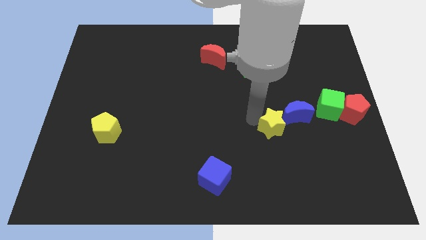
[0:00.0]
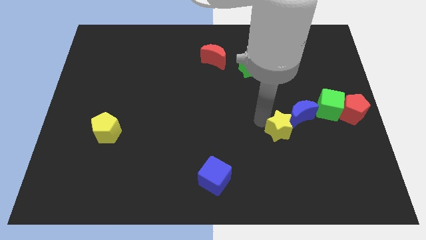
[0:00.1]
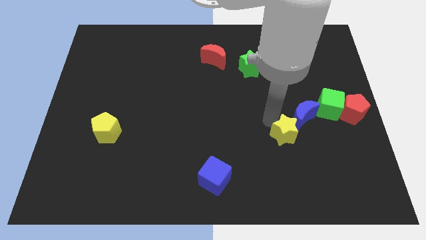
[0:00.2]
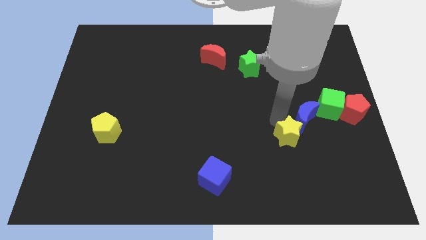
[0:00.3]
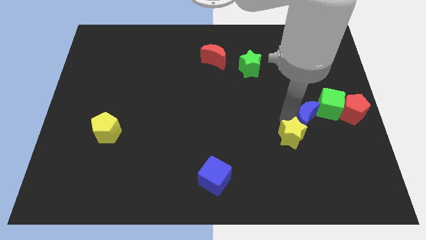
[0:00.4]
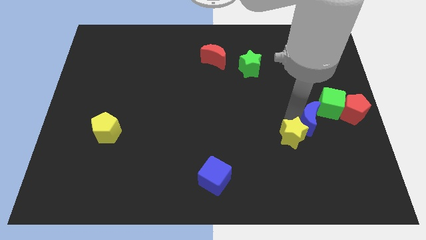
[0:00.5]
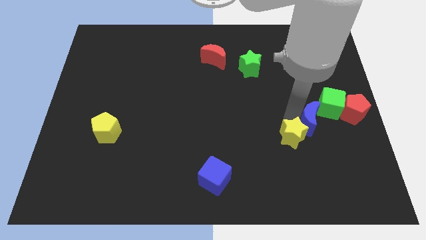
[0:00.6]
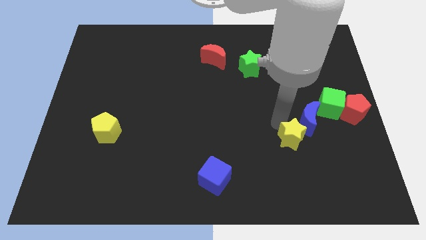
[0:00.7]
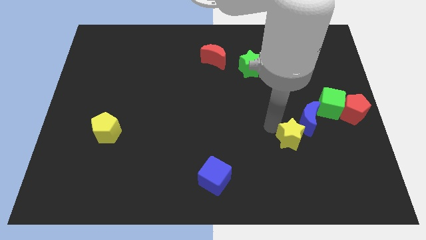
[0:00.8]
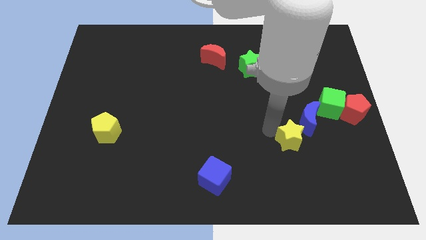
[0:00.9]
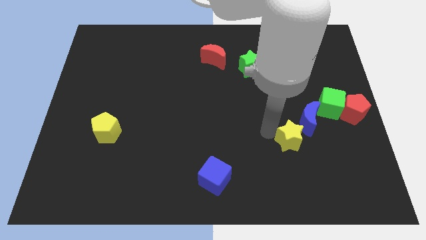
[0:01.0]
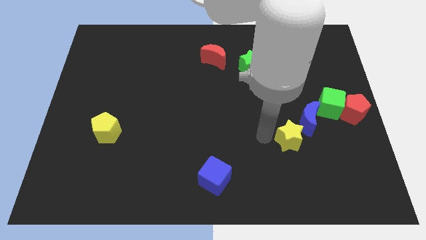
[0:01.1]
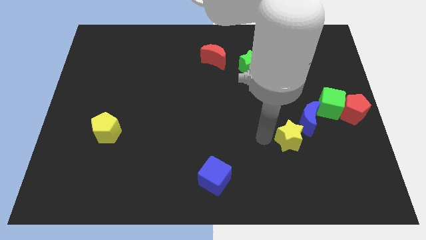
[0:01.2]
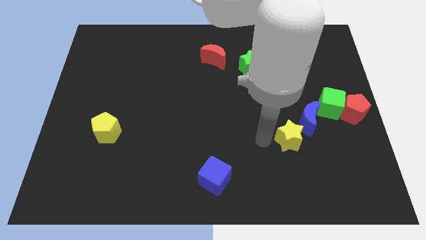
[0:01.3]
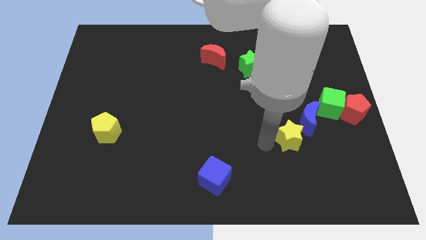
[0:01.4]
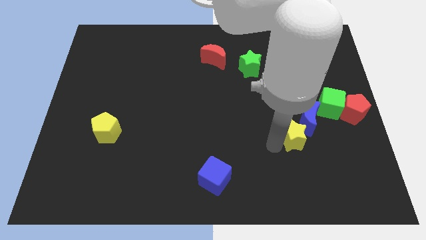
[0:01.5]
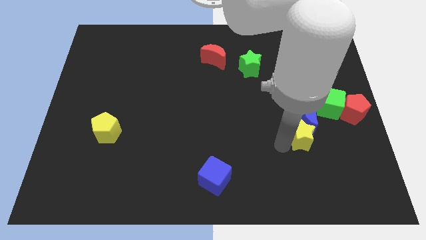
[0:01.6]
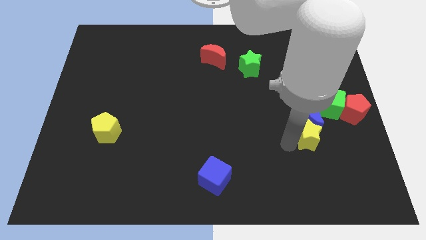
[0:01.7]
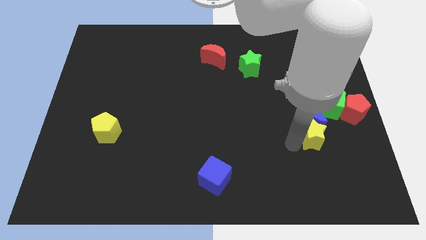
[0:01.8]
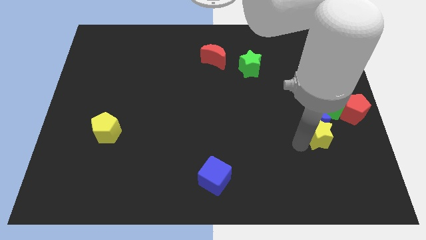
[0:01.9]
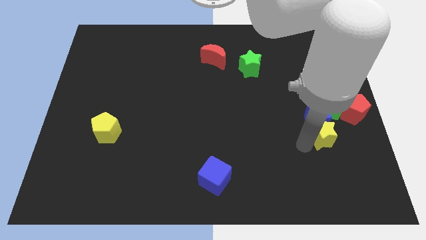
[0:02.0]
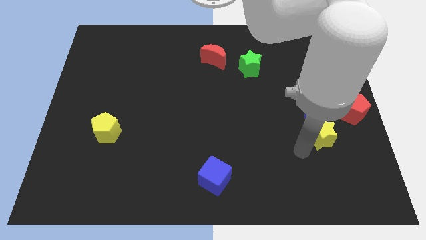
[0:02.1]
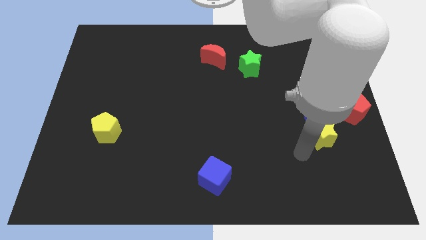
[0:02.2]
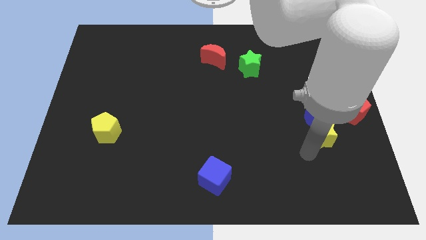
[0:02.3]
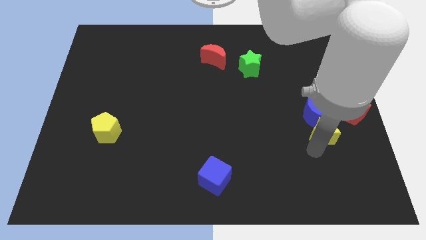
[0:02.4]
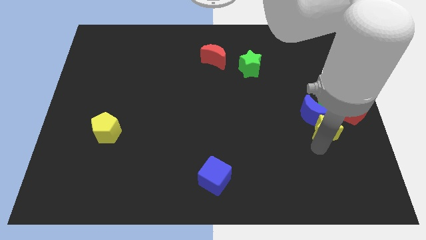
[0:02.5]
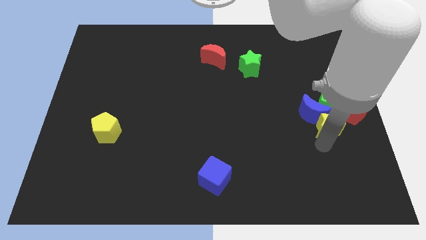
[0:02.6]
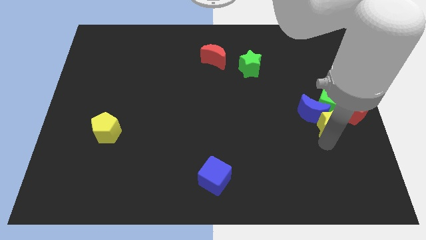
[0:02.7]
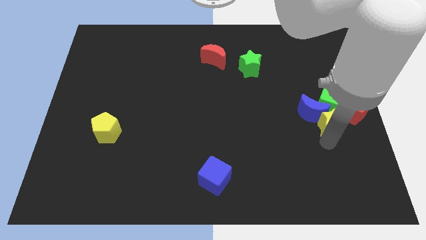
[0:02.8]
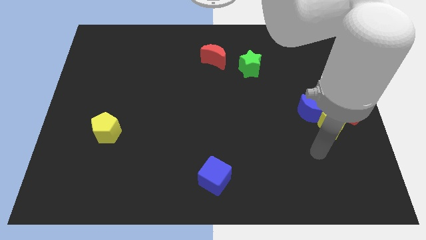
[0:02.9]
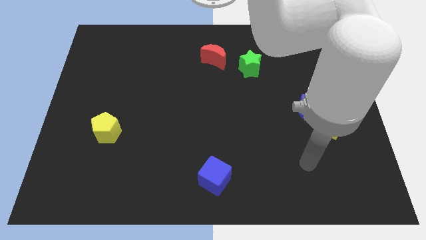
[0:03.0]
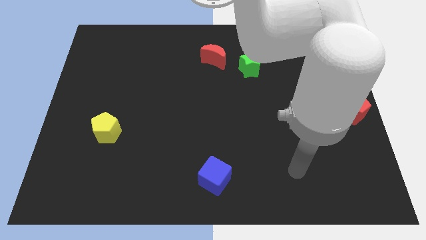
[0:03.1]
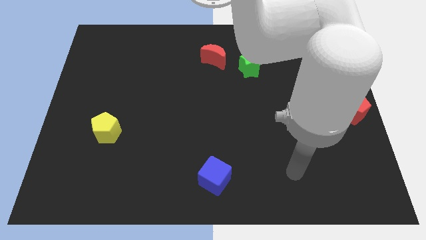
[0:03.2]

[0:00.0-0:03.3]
place the yellow star below blue crescent and green cube

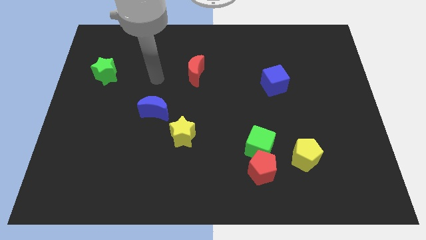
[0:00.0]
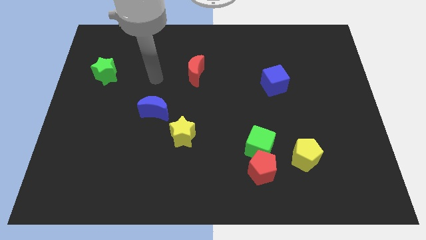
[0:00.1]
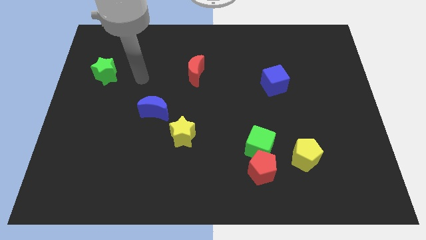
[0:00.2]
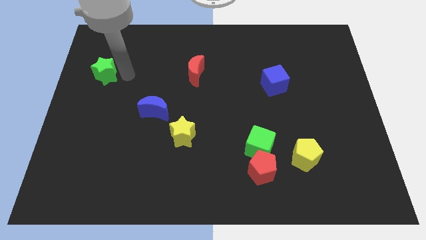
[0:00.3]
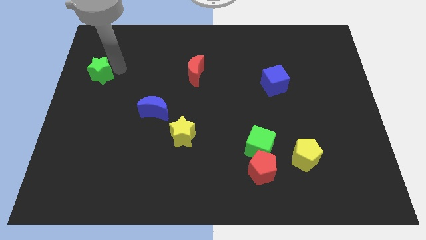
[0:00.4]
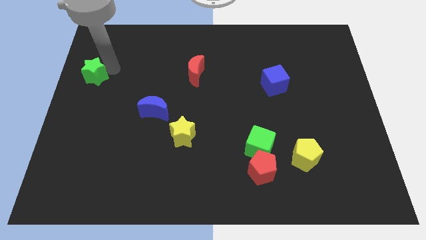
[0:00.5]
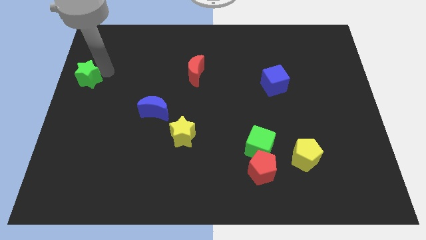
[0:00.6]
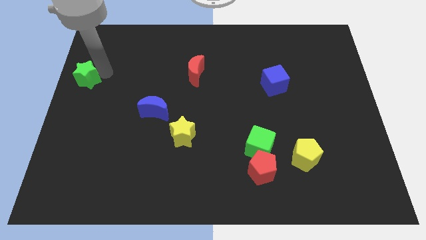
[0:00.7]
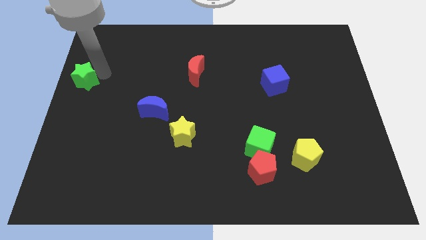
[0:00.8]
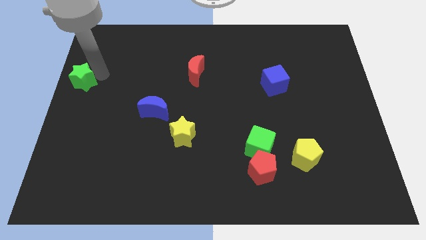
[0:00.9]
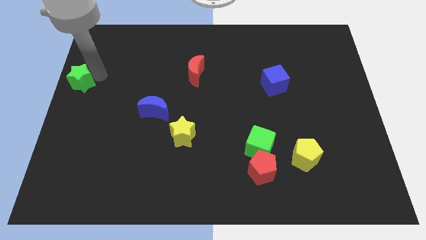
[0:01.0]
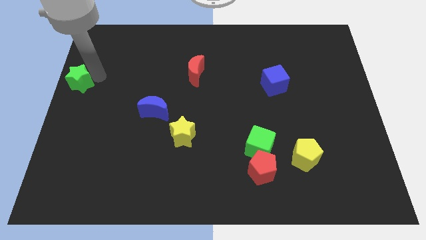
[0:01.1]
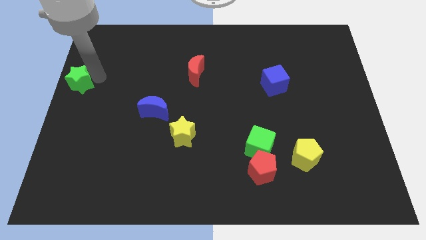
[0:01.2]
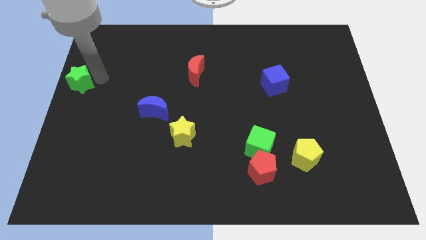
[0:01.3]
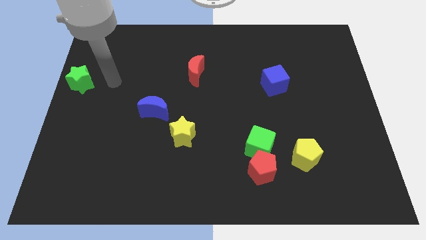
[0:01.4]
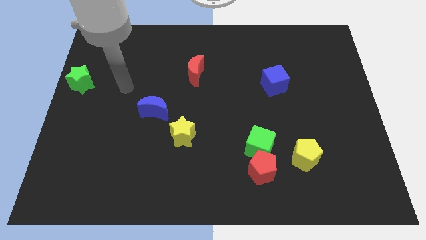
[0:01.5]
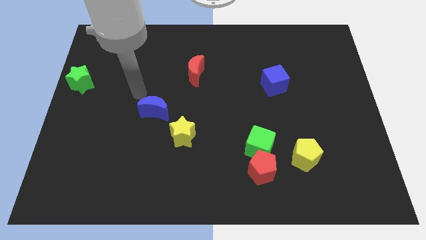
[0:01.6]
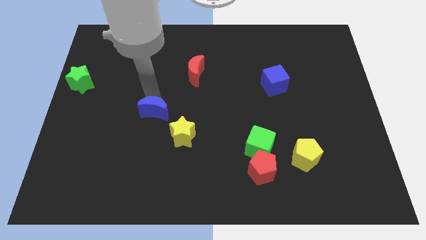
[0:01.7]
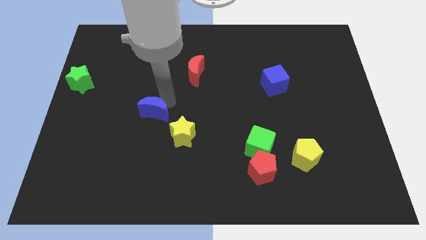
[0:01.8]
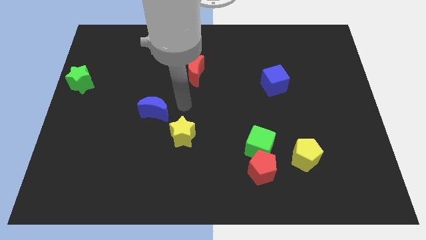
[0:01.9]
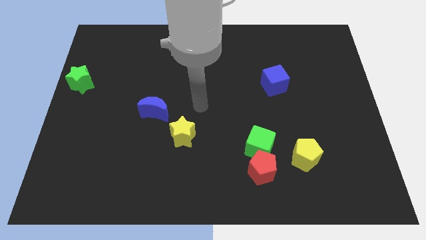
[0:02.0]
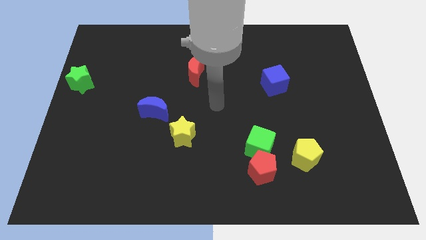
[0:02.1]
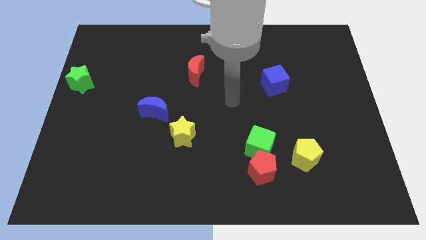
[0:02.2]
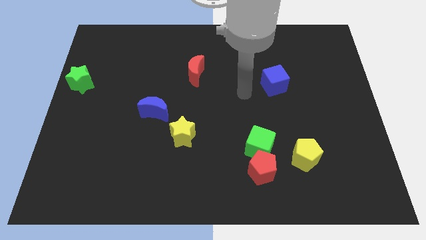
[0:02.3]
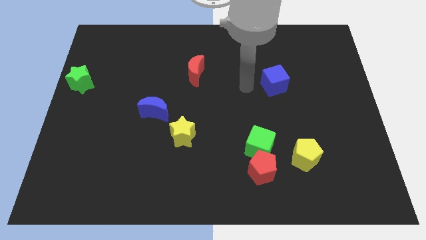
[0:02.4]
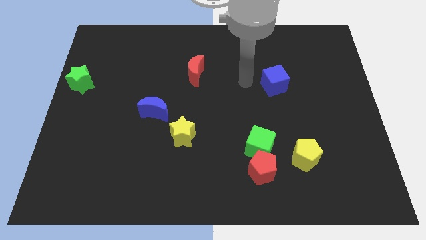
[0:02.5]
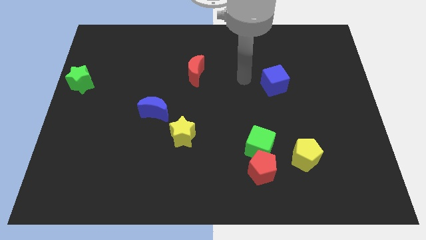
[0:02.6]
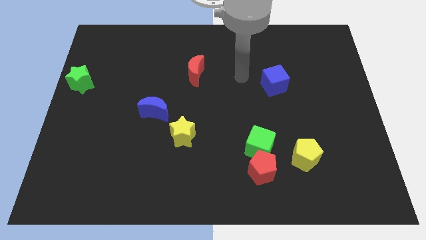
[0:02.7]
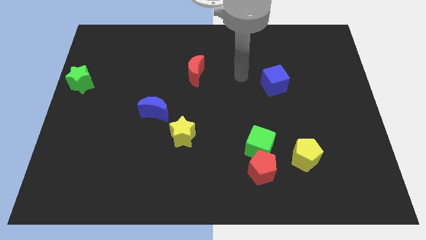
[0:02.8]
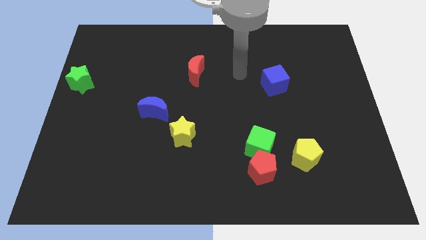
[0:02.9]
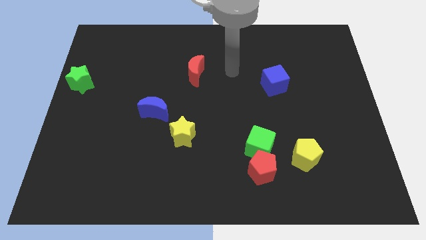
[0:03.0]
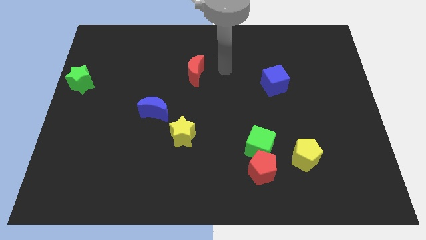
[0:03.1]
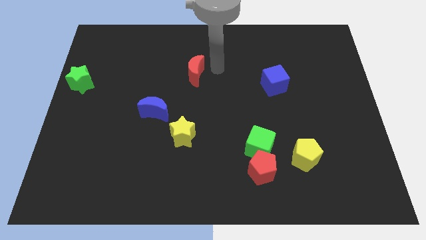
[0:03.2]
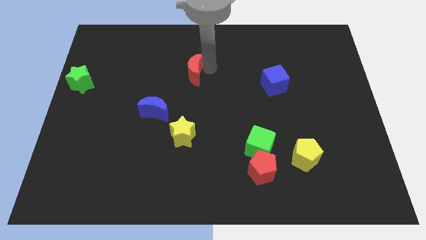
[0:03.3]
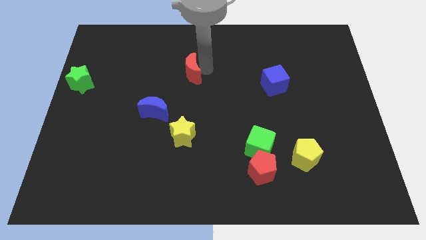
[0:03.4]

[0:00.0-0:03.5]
move the green star to the left side of the board

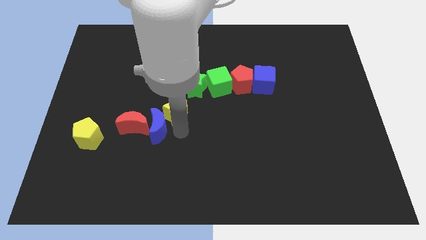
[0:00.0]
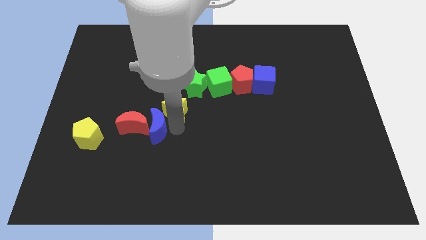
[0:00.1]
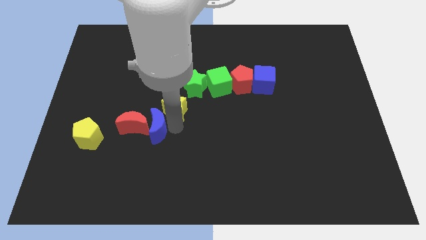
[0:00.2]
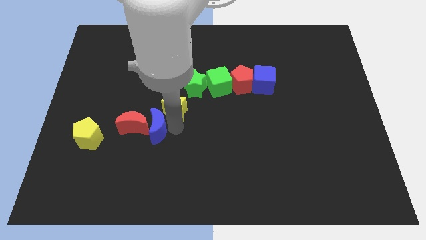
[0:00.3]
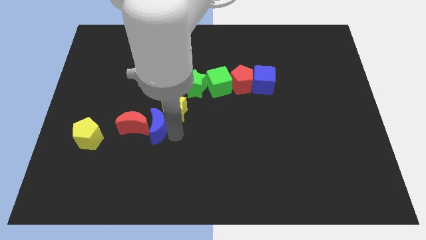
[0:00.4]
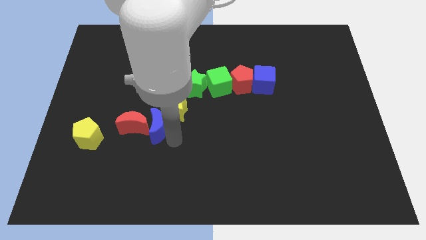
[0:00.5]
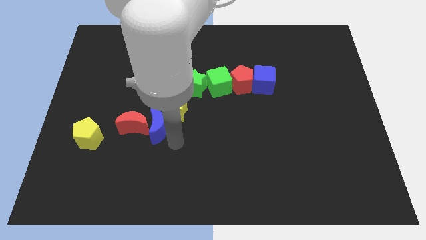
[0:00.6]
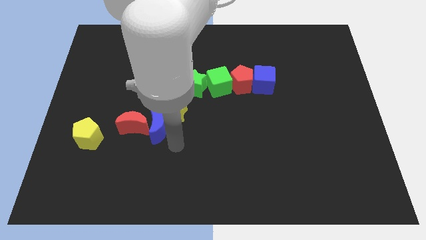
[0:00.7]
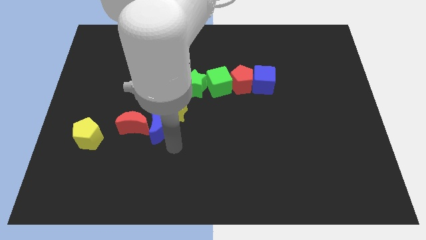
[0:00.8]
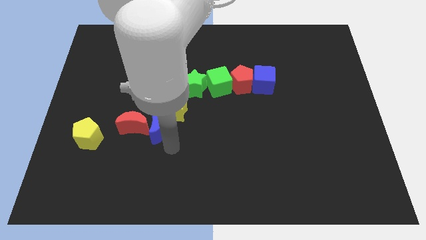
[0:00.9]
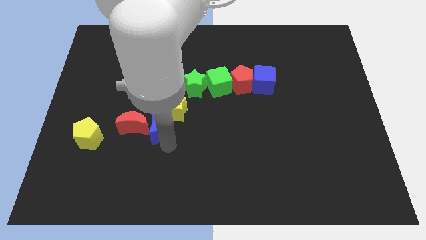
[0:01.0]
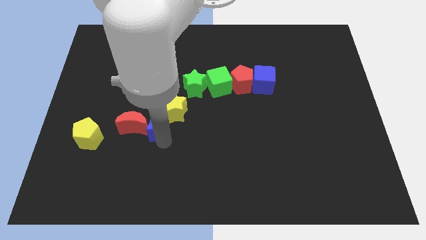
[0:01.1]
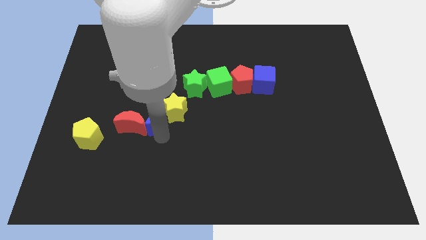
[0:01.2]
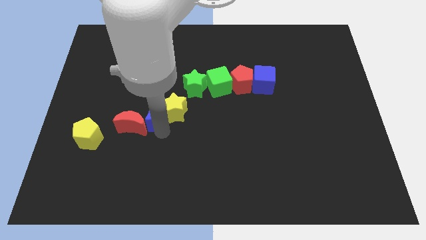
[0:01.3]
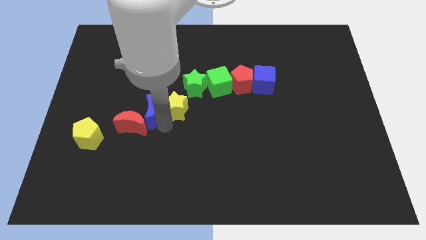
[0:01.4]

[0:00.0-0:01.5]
slightly move the yellow star and blue crescent upwards of the board

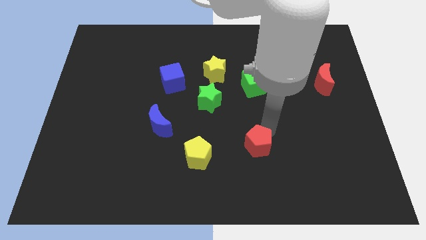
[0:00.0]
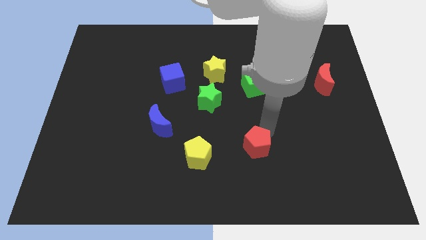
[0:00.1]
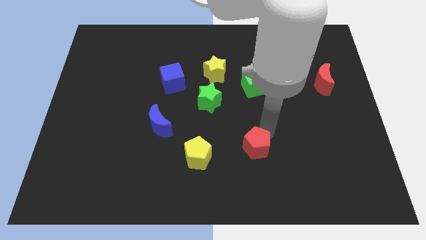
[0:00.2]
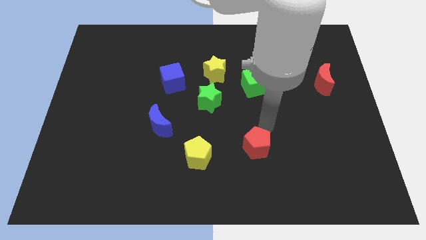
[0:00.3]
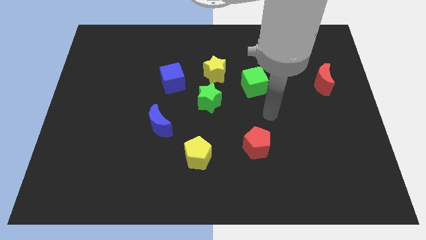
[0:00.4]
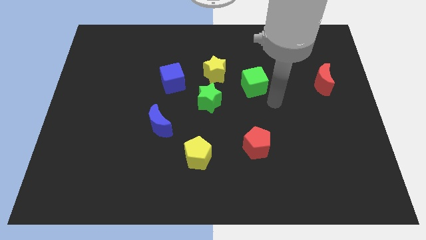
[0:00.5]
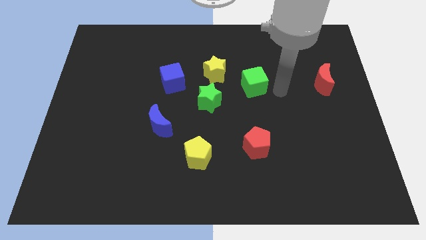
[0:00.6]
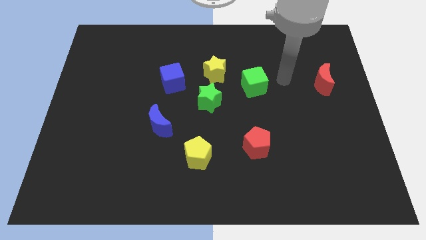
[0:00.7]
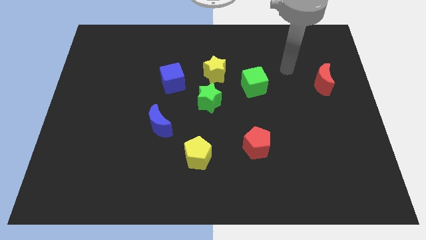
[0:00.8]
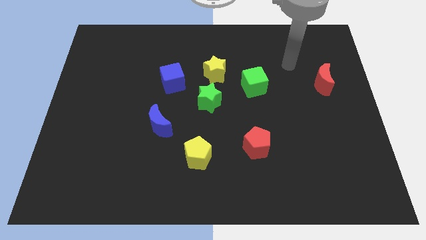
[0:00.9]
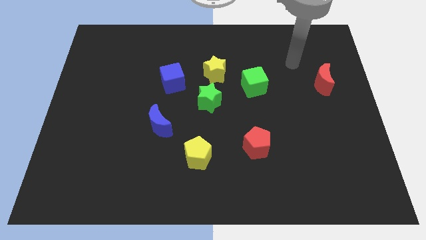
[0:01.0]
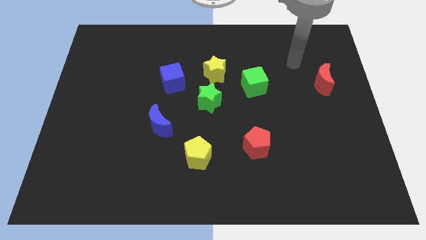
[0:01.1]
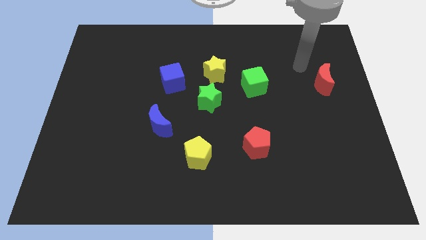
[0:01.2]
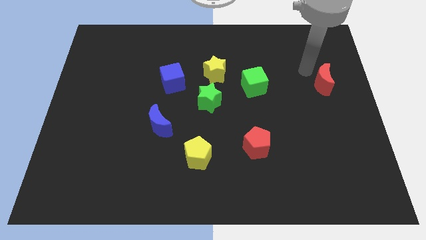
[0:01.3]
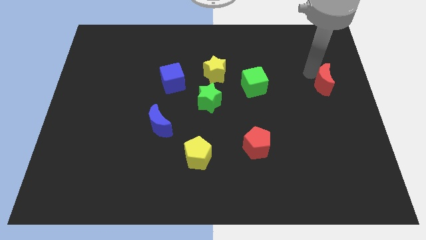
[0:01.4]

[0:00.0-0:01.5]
move the arm towards the top left to the red crescent
